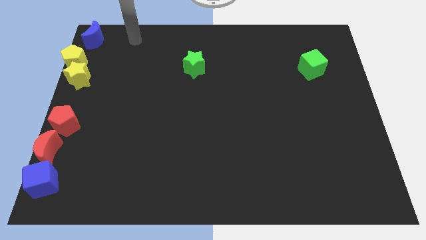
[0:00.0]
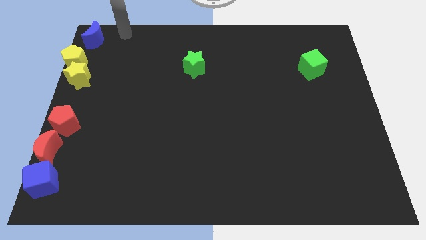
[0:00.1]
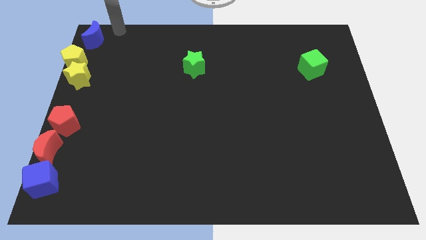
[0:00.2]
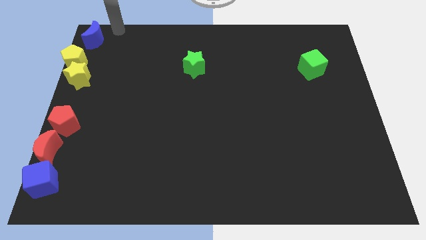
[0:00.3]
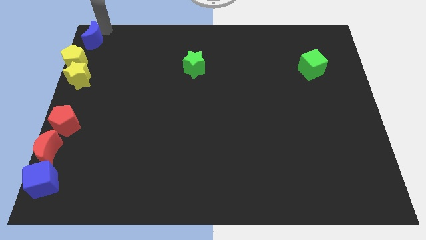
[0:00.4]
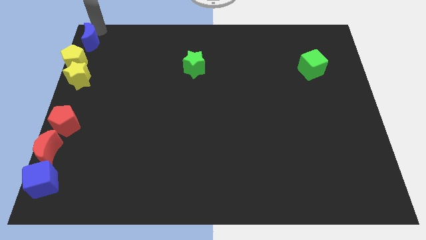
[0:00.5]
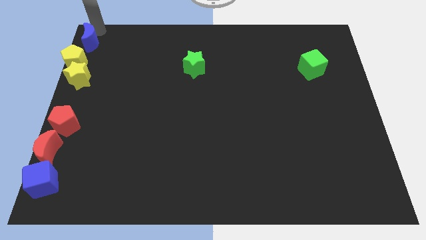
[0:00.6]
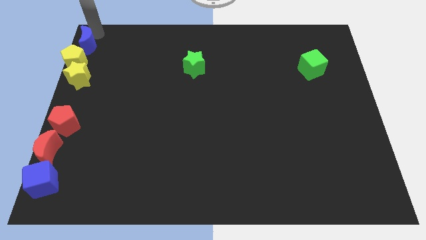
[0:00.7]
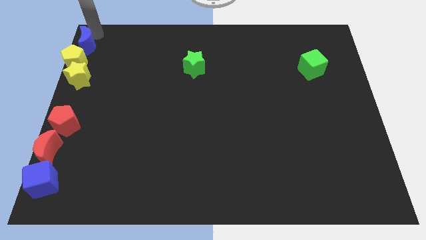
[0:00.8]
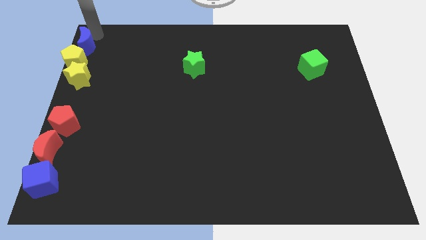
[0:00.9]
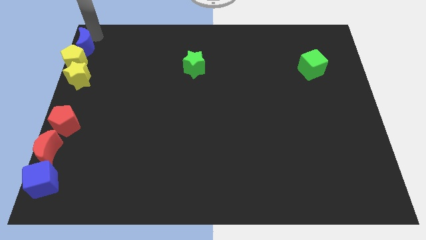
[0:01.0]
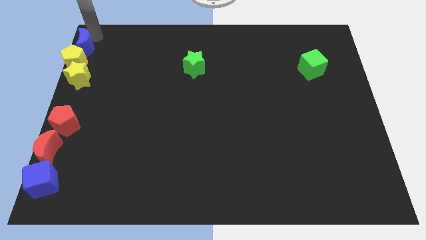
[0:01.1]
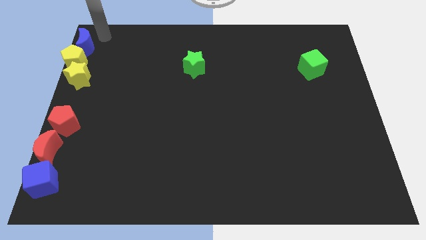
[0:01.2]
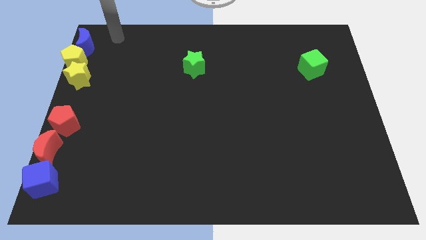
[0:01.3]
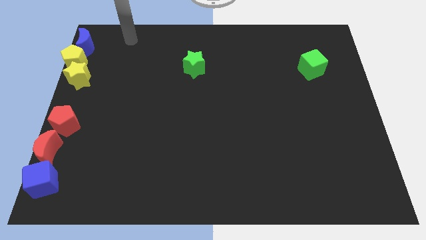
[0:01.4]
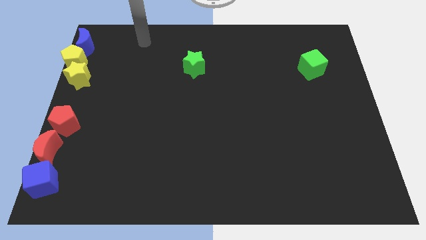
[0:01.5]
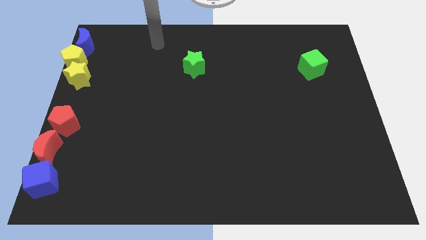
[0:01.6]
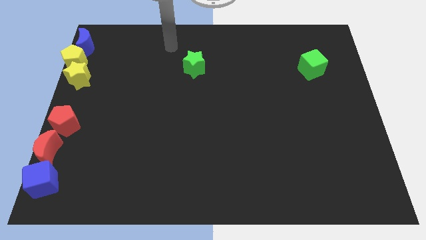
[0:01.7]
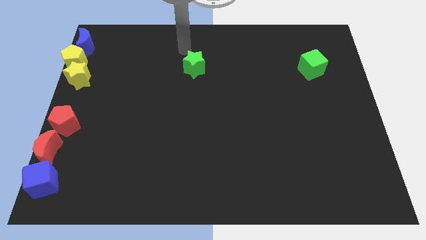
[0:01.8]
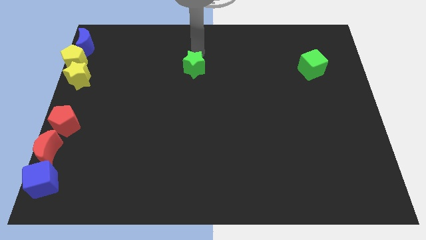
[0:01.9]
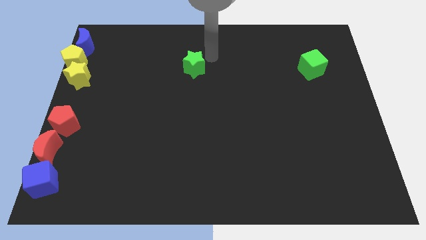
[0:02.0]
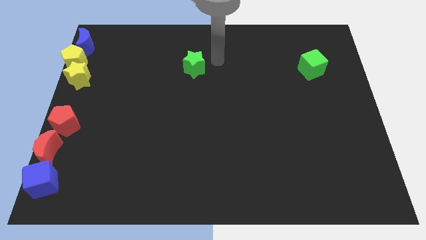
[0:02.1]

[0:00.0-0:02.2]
push the blue crescent slightly towards the yellow pentagon

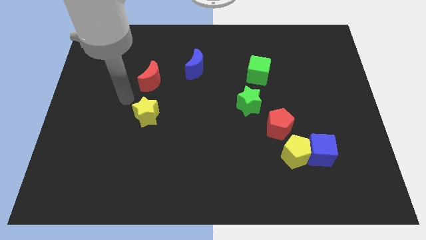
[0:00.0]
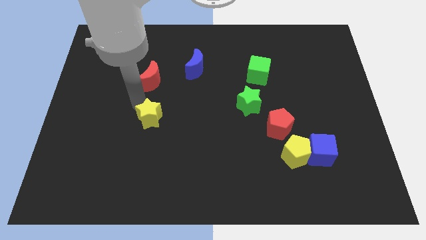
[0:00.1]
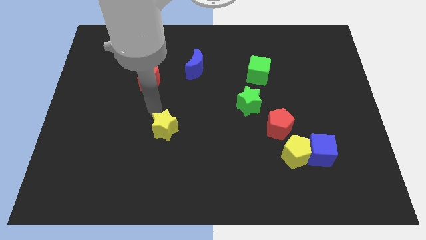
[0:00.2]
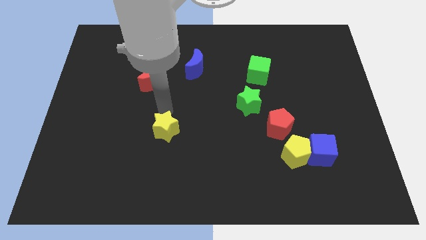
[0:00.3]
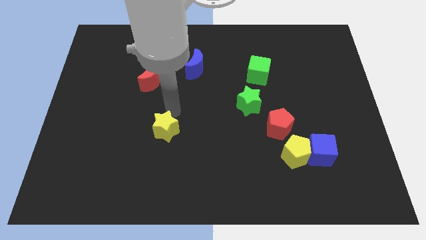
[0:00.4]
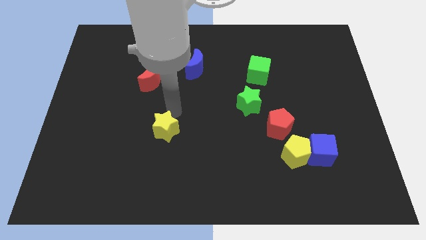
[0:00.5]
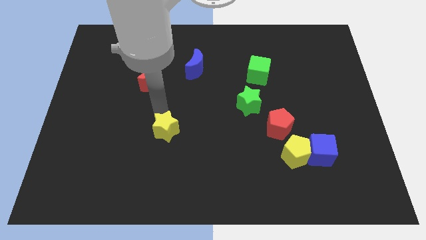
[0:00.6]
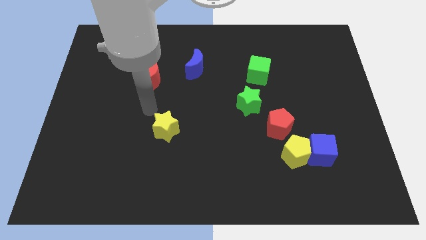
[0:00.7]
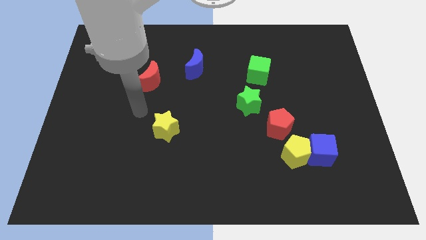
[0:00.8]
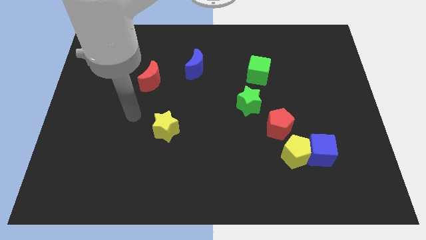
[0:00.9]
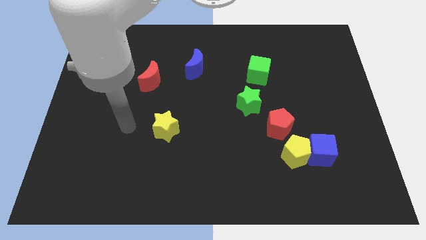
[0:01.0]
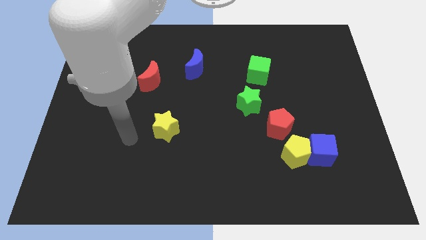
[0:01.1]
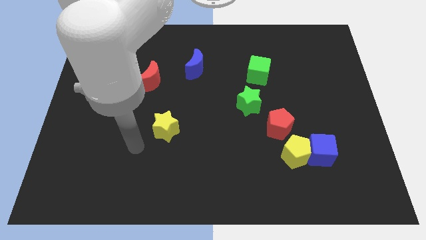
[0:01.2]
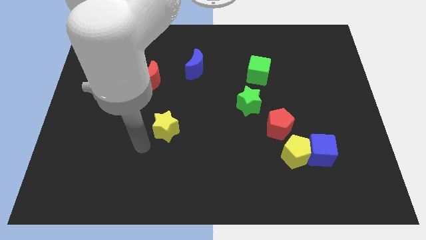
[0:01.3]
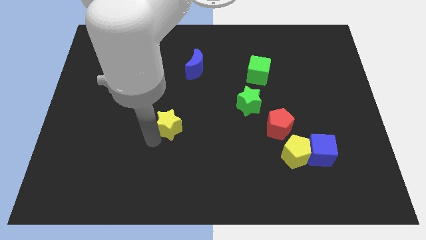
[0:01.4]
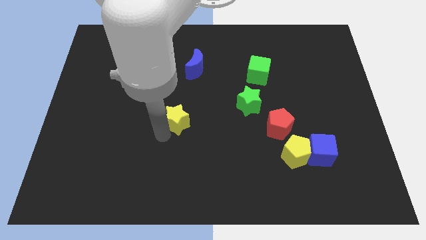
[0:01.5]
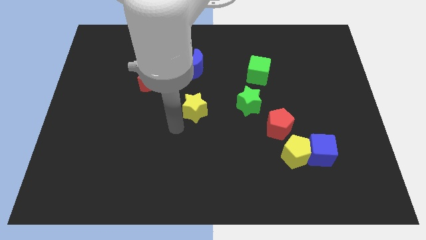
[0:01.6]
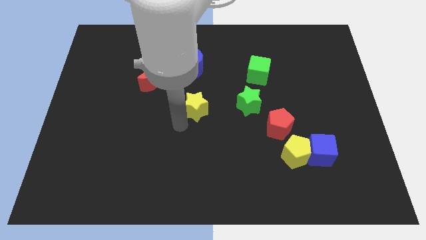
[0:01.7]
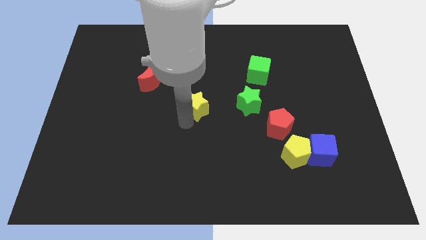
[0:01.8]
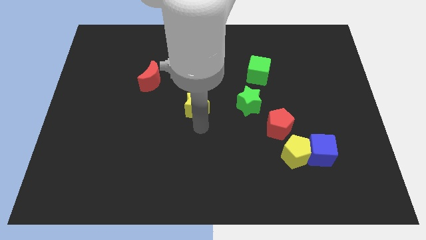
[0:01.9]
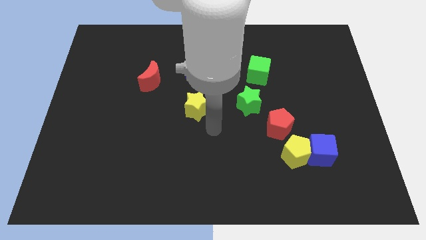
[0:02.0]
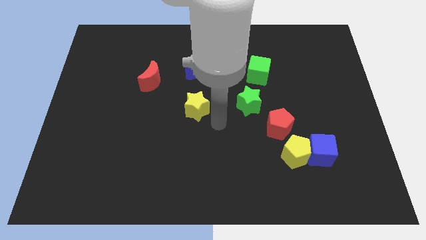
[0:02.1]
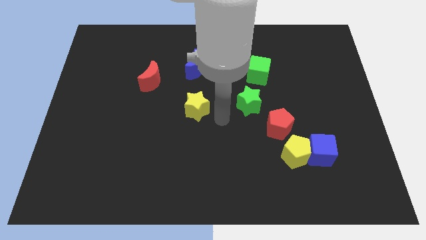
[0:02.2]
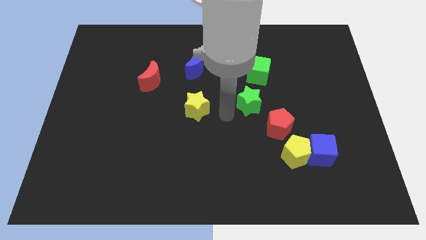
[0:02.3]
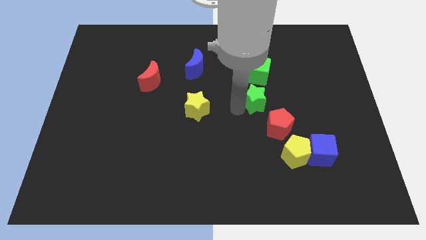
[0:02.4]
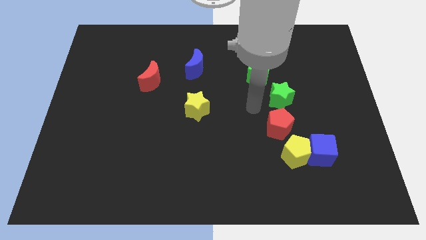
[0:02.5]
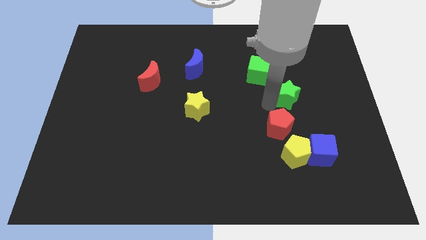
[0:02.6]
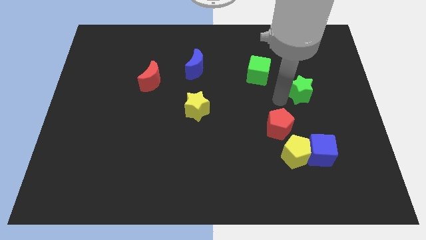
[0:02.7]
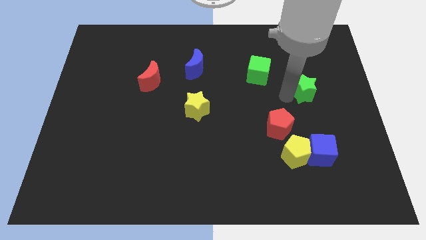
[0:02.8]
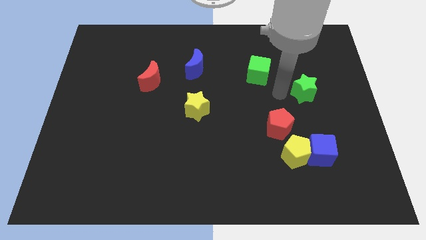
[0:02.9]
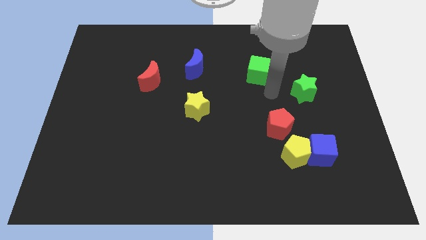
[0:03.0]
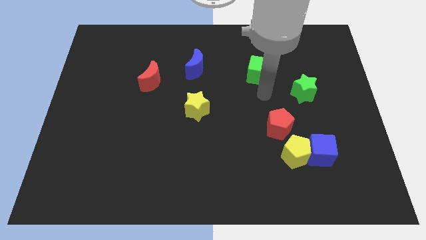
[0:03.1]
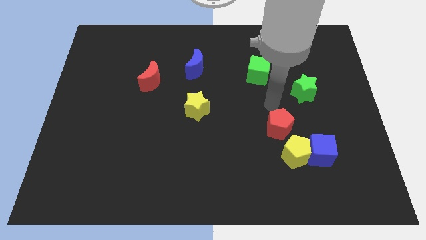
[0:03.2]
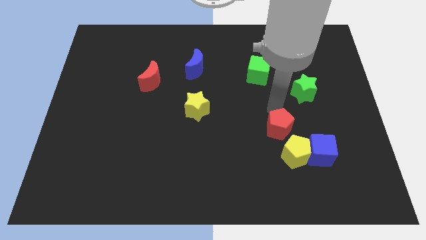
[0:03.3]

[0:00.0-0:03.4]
put the yellow star and green star in a line horizontally

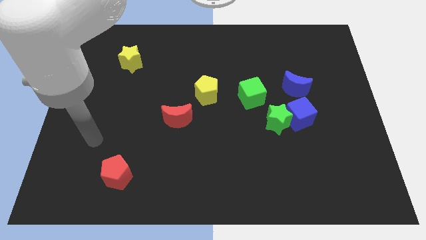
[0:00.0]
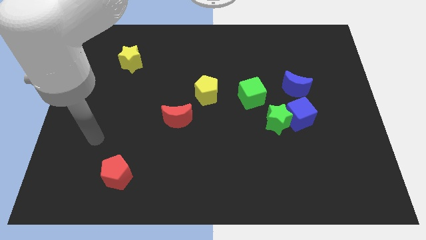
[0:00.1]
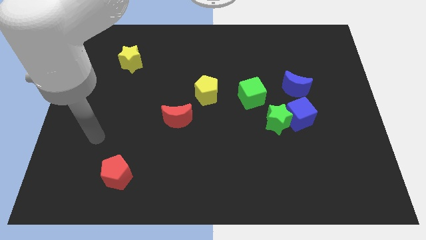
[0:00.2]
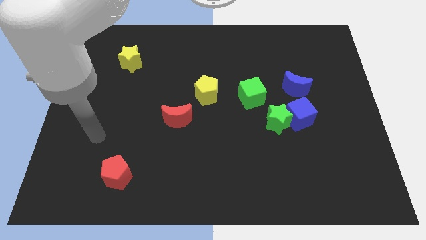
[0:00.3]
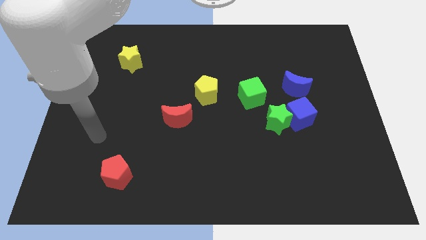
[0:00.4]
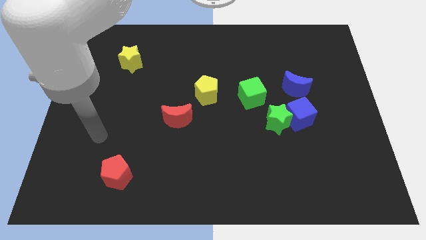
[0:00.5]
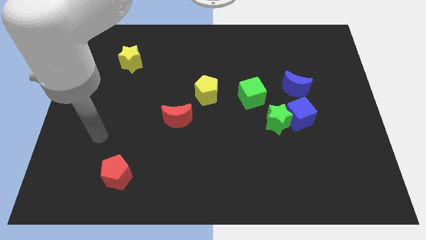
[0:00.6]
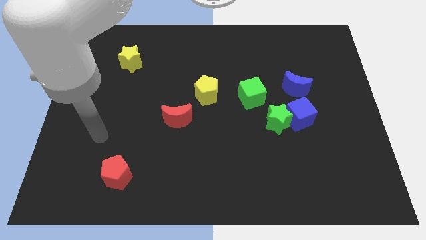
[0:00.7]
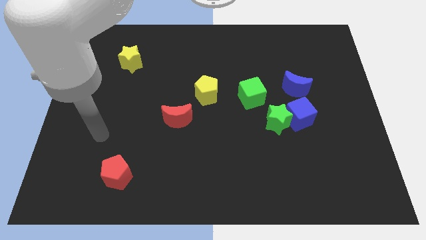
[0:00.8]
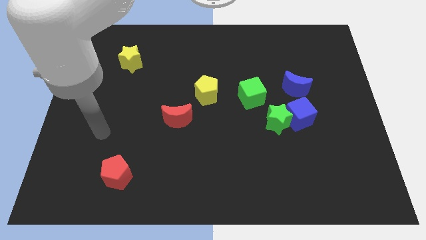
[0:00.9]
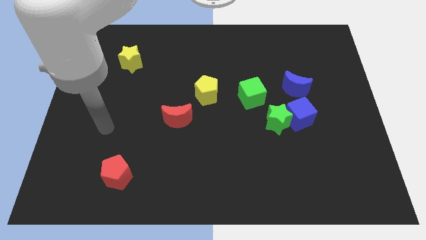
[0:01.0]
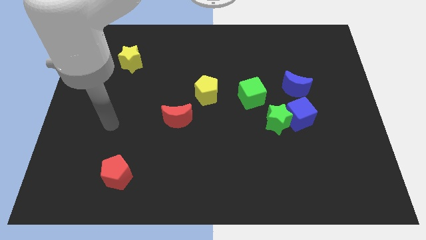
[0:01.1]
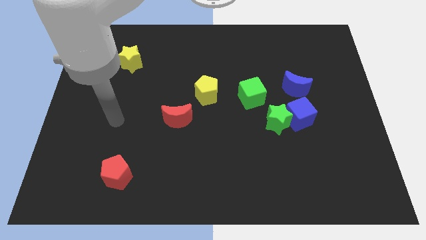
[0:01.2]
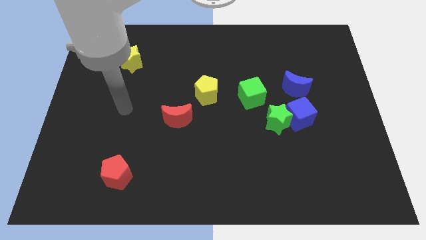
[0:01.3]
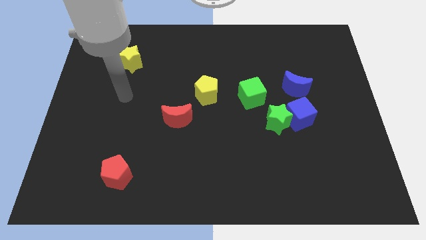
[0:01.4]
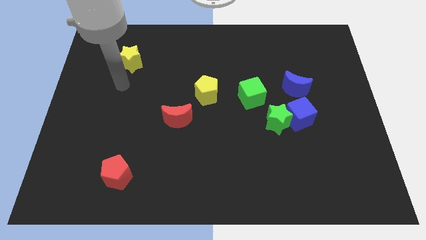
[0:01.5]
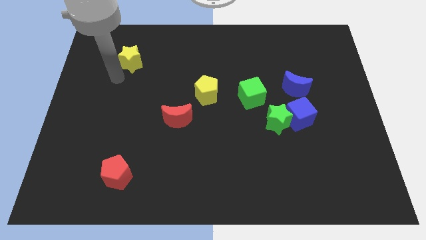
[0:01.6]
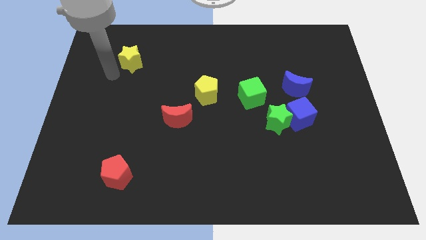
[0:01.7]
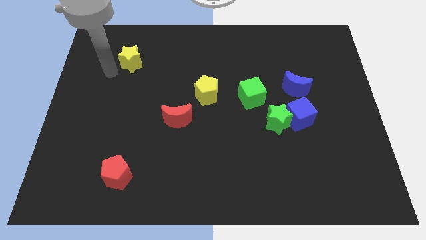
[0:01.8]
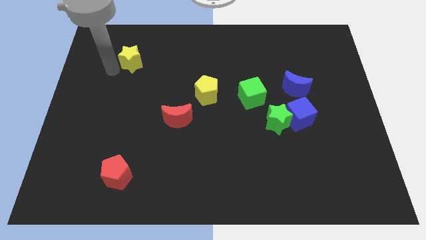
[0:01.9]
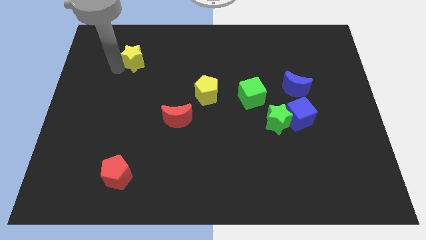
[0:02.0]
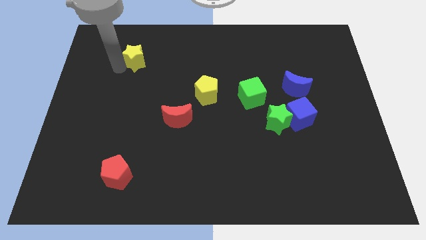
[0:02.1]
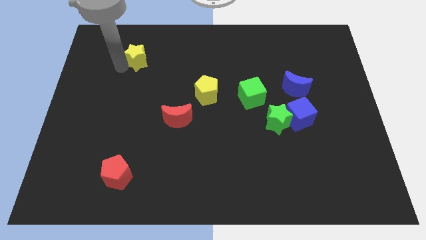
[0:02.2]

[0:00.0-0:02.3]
move the arm into the yellow star

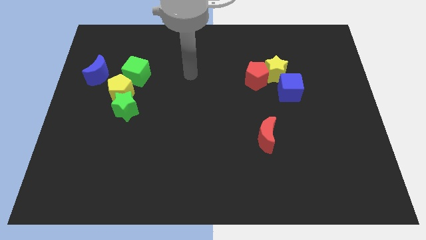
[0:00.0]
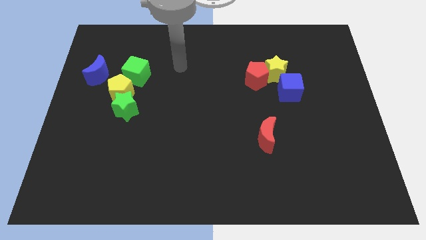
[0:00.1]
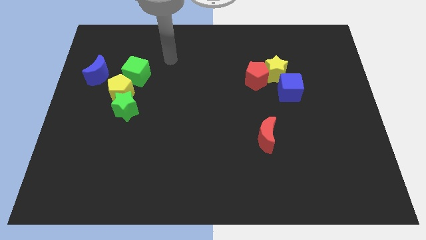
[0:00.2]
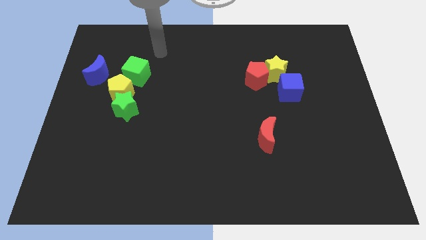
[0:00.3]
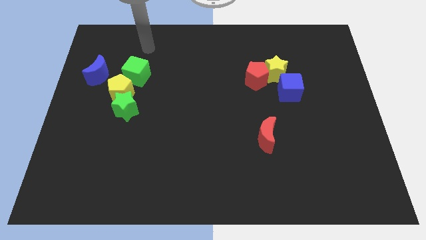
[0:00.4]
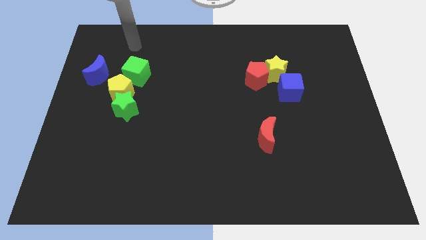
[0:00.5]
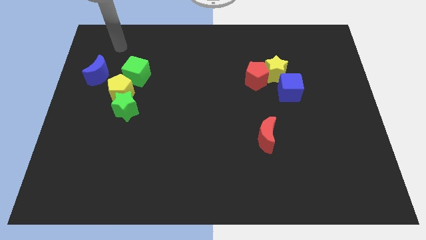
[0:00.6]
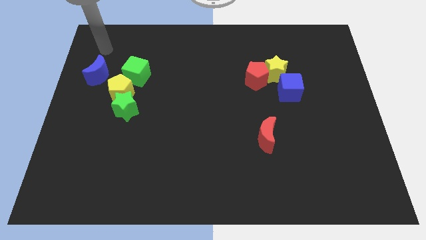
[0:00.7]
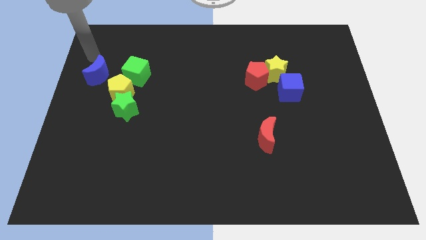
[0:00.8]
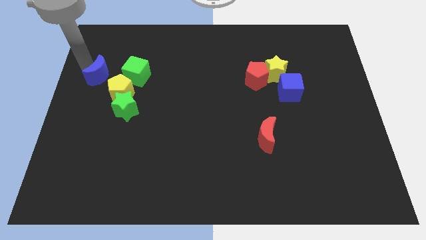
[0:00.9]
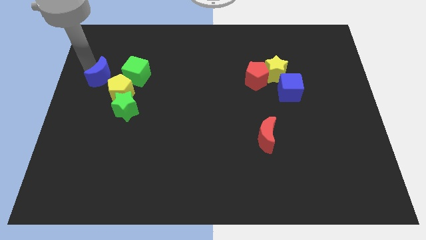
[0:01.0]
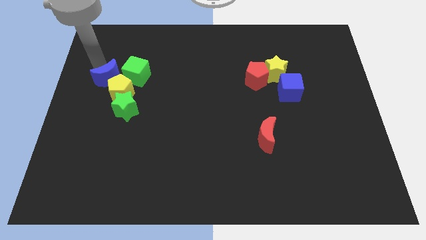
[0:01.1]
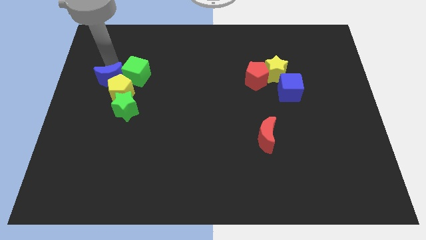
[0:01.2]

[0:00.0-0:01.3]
push the blue crescent towards the yellow pentagon
